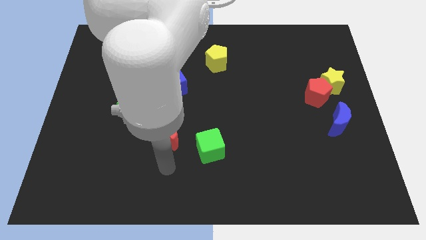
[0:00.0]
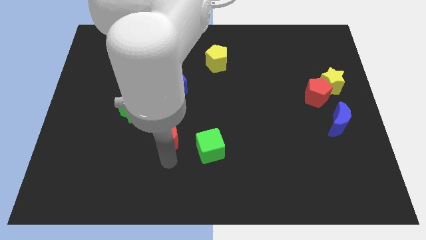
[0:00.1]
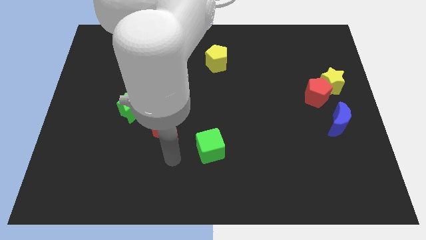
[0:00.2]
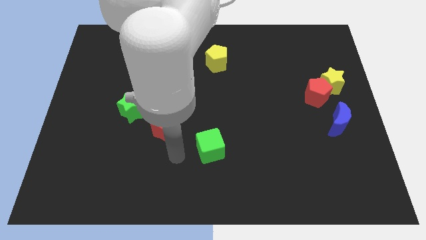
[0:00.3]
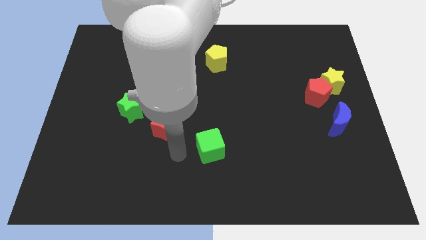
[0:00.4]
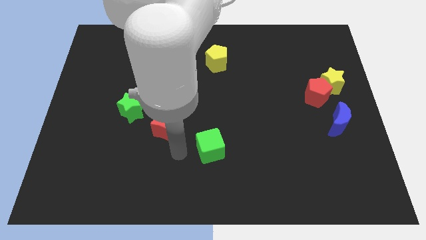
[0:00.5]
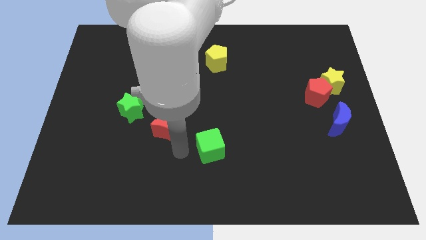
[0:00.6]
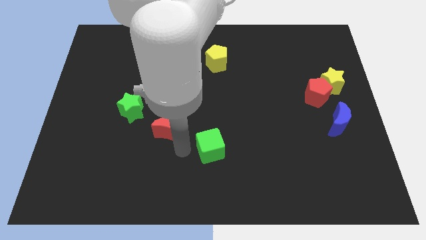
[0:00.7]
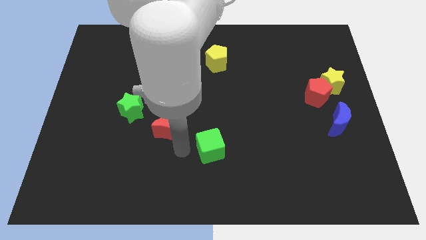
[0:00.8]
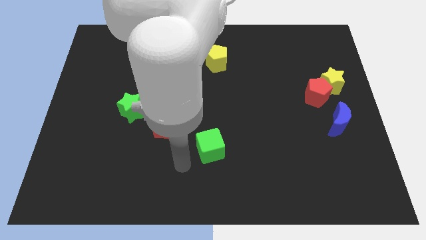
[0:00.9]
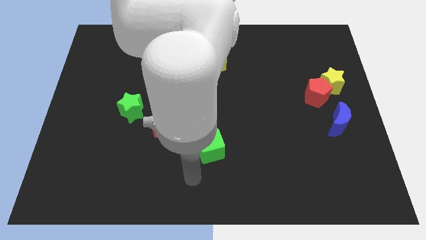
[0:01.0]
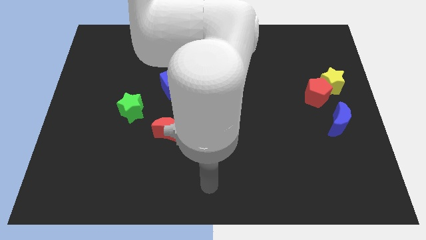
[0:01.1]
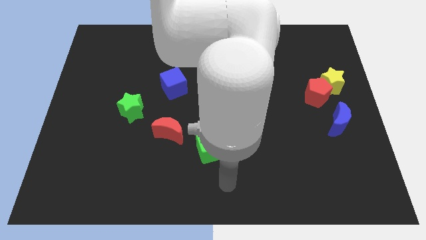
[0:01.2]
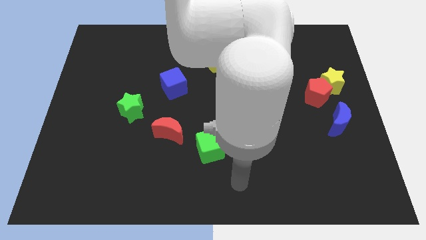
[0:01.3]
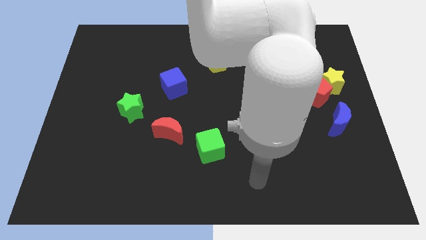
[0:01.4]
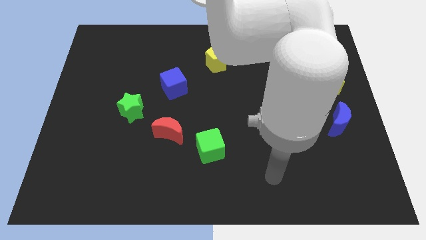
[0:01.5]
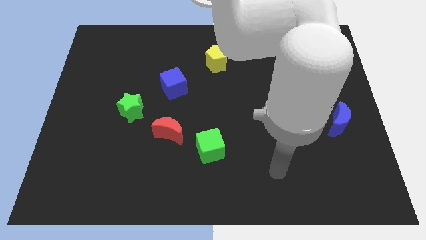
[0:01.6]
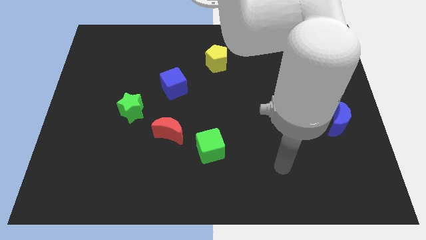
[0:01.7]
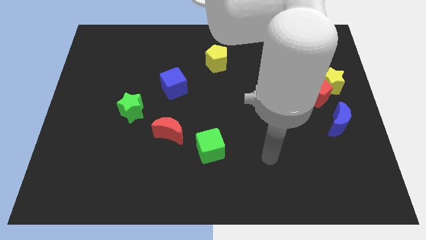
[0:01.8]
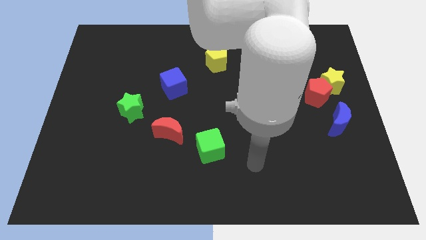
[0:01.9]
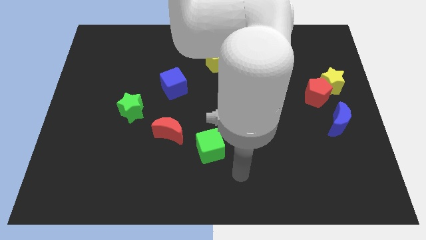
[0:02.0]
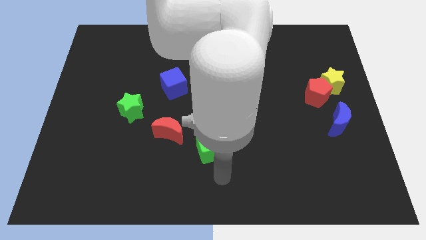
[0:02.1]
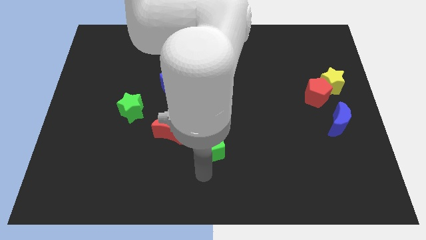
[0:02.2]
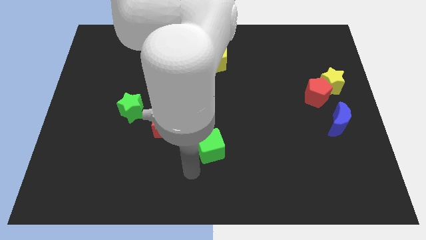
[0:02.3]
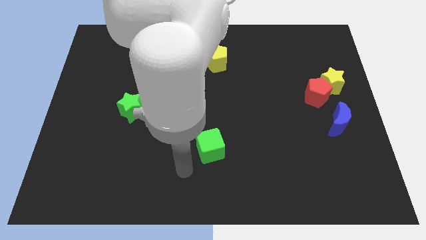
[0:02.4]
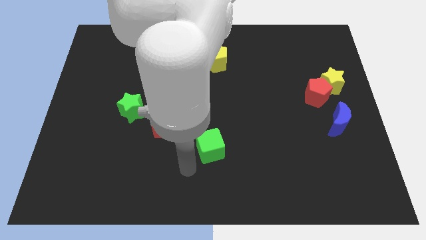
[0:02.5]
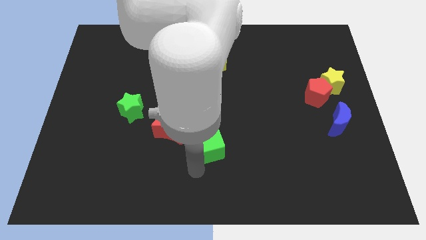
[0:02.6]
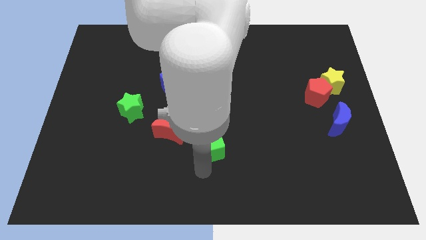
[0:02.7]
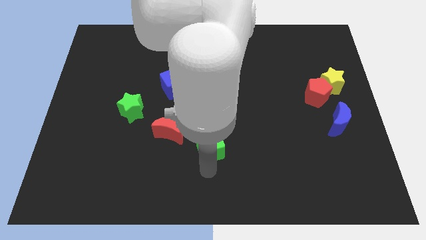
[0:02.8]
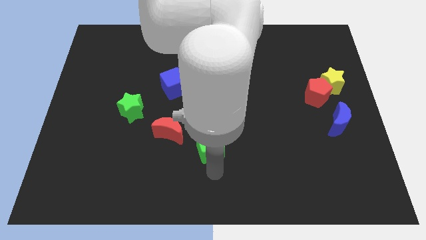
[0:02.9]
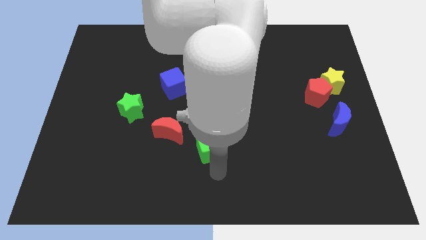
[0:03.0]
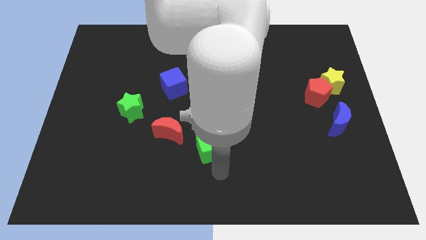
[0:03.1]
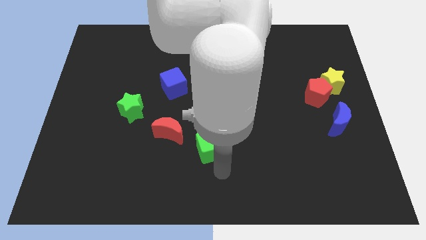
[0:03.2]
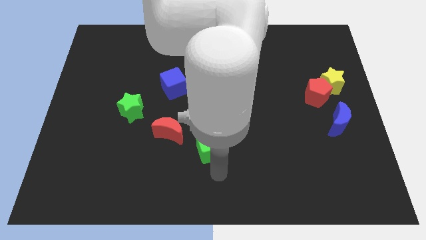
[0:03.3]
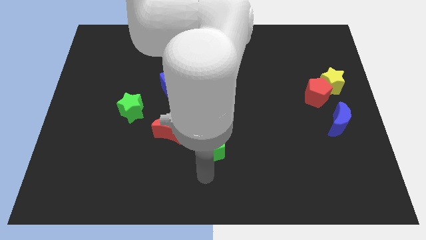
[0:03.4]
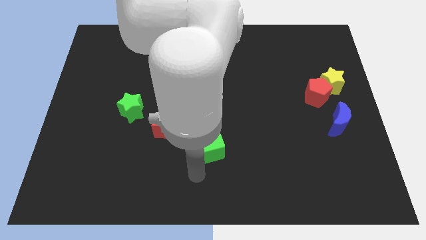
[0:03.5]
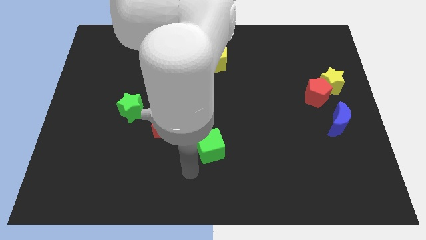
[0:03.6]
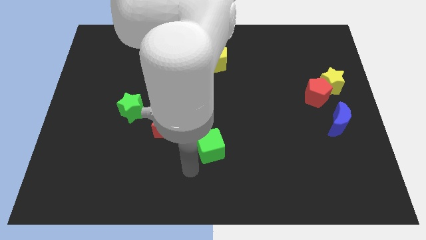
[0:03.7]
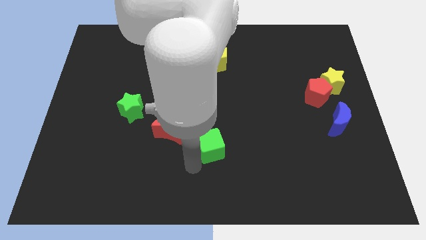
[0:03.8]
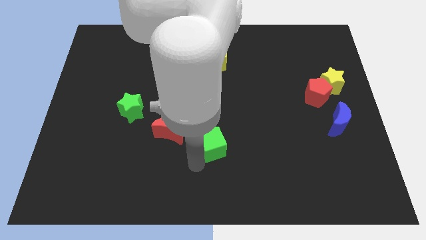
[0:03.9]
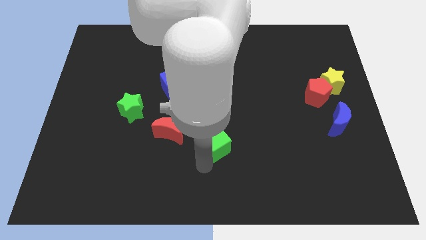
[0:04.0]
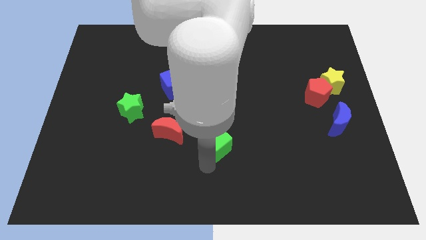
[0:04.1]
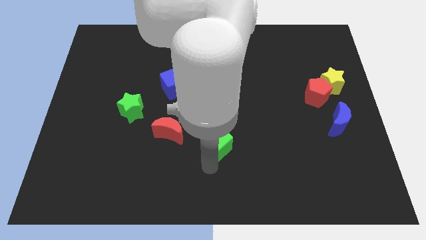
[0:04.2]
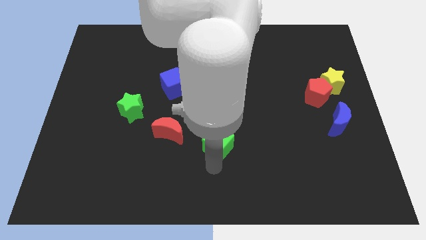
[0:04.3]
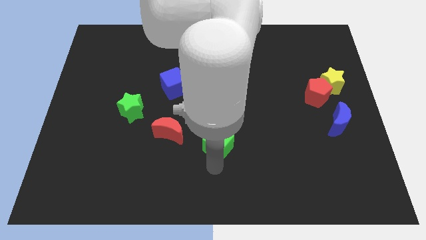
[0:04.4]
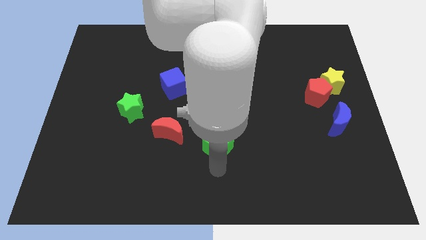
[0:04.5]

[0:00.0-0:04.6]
place the green cube adjacent to the red crescent

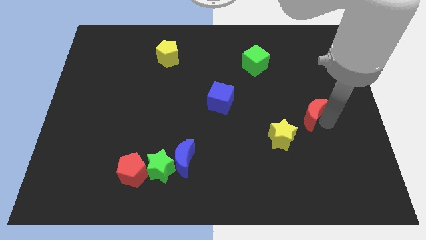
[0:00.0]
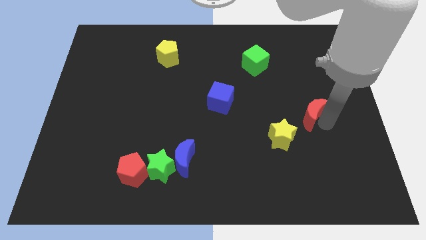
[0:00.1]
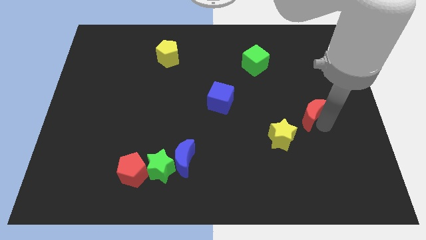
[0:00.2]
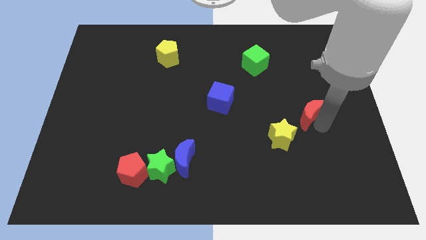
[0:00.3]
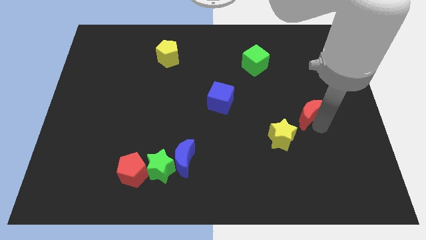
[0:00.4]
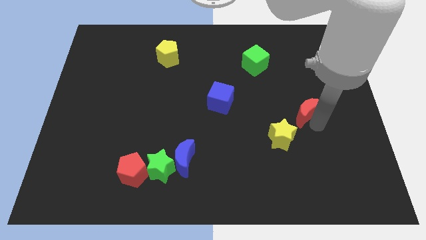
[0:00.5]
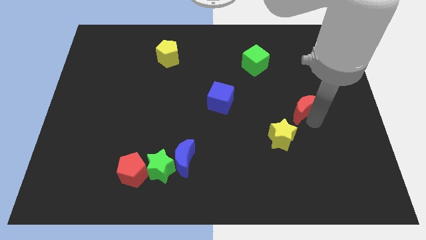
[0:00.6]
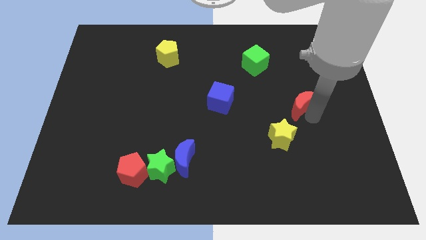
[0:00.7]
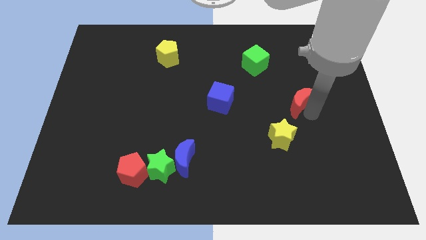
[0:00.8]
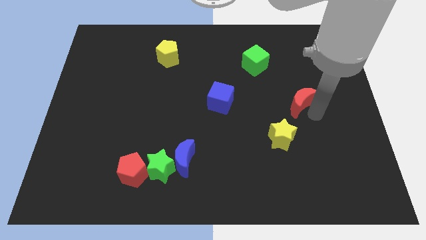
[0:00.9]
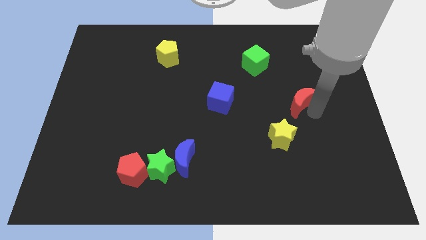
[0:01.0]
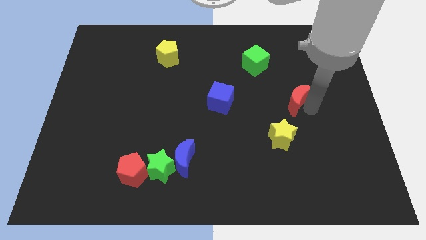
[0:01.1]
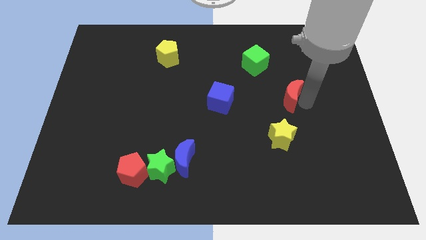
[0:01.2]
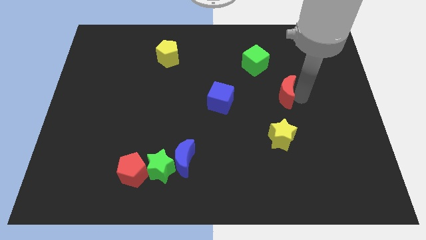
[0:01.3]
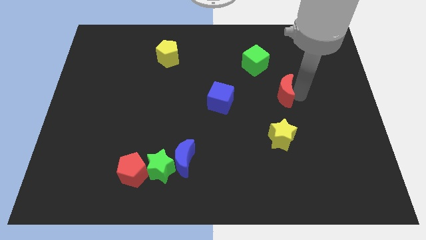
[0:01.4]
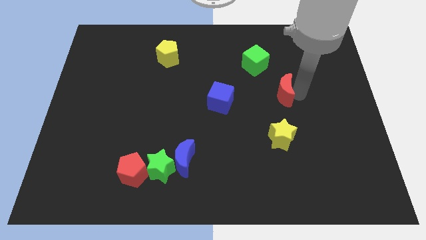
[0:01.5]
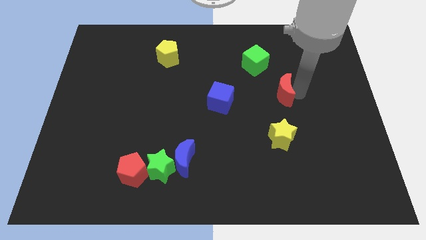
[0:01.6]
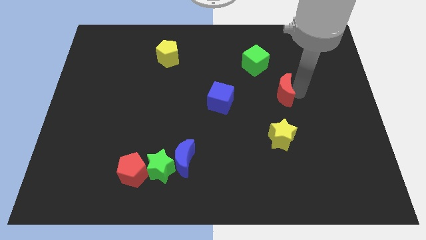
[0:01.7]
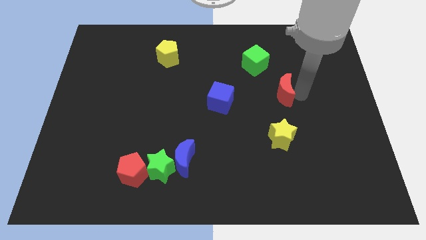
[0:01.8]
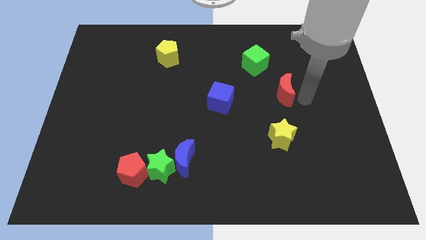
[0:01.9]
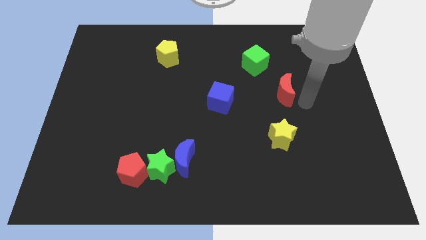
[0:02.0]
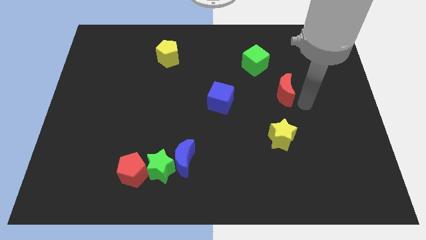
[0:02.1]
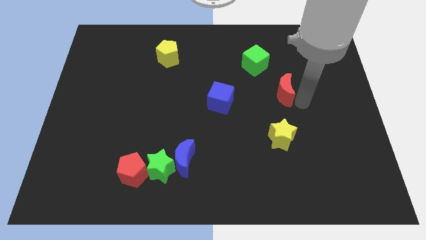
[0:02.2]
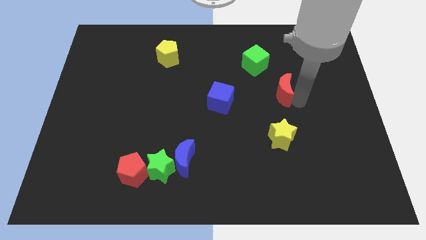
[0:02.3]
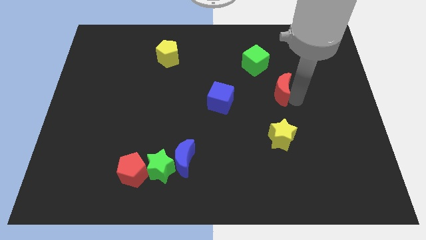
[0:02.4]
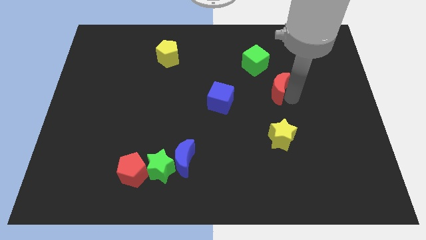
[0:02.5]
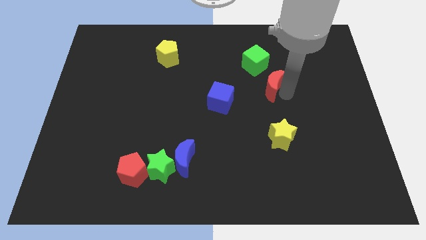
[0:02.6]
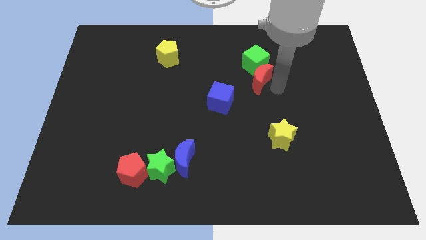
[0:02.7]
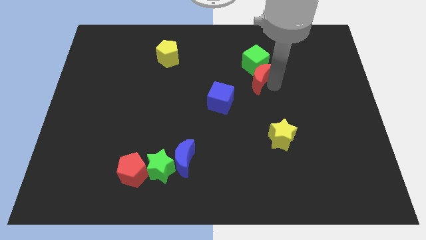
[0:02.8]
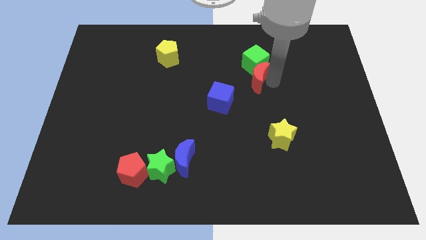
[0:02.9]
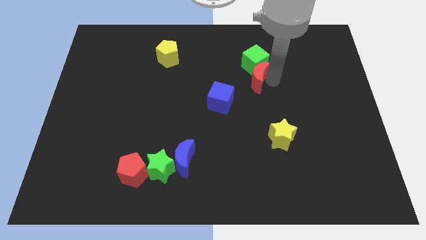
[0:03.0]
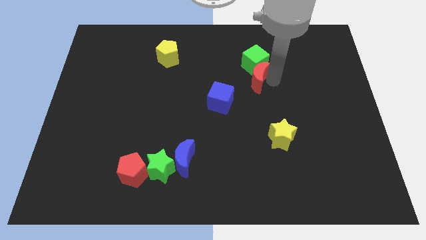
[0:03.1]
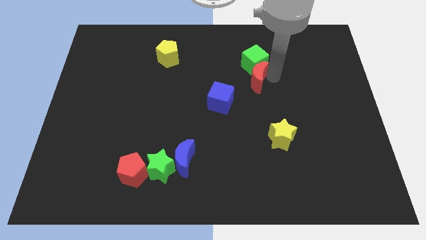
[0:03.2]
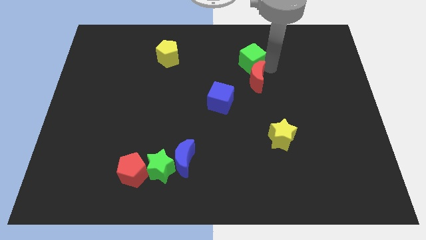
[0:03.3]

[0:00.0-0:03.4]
push the green cube with red crescent

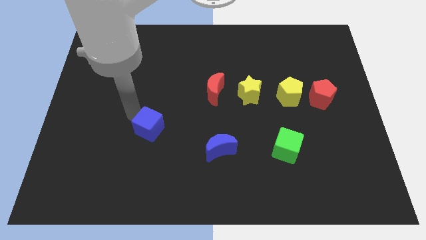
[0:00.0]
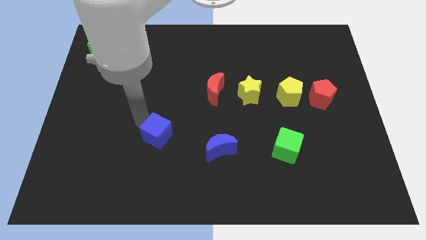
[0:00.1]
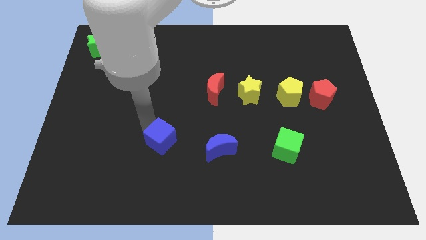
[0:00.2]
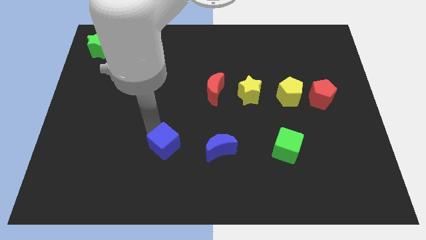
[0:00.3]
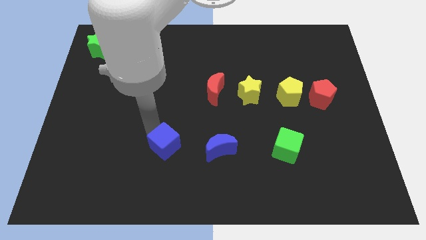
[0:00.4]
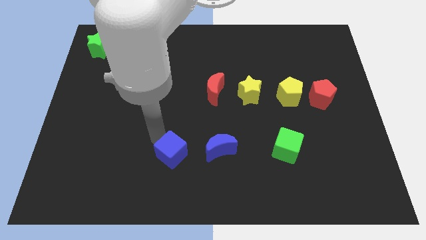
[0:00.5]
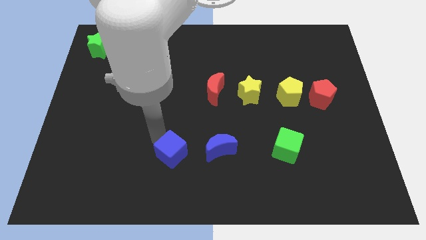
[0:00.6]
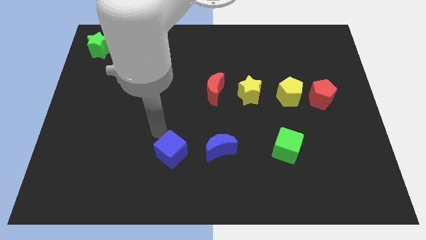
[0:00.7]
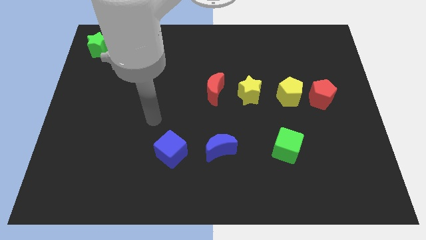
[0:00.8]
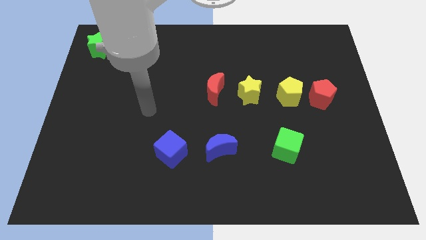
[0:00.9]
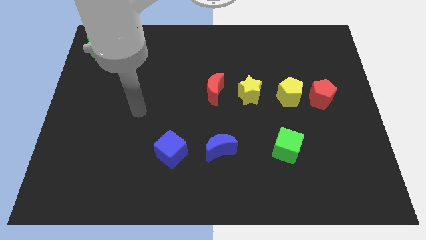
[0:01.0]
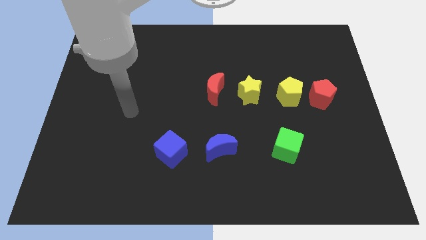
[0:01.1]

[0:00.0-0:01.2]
place the blue cube left to the blue crescent
